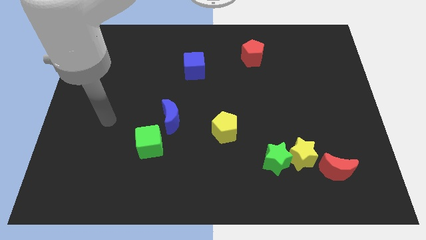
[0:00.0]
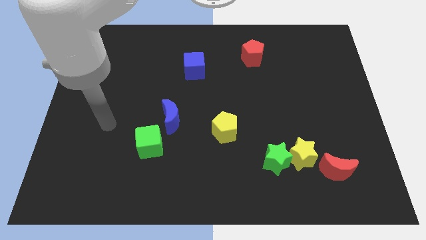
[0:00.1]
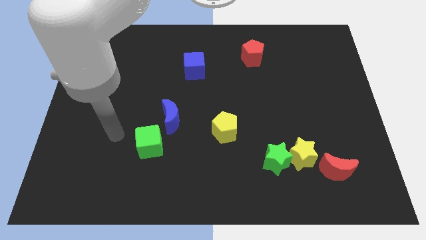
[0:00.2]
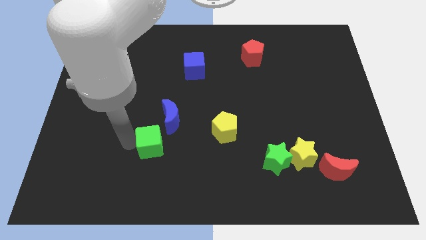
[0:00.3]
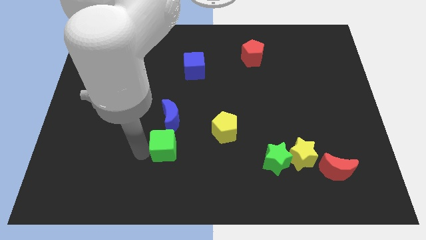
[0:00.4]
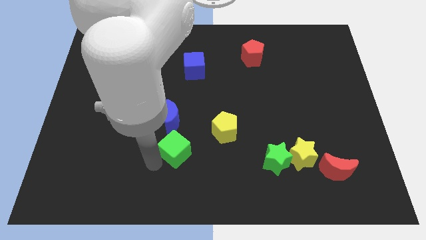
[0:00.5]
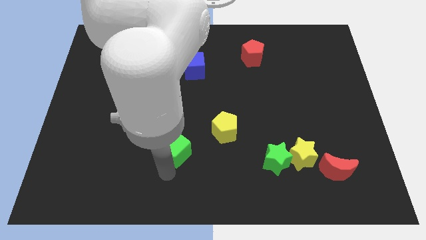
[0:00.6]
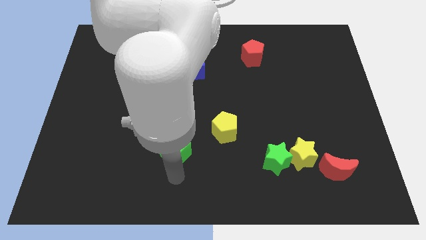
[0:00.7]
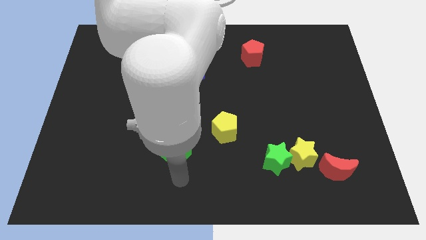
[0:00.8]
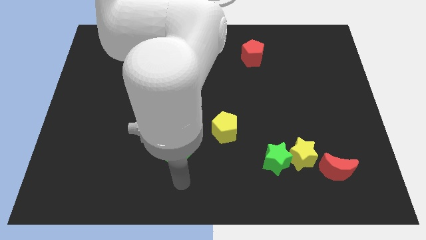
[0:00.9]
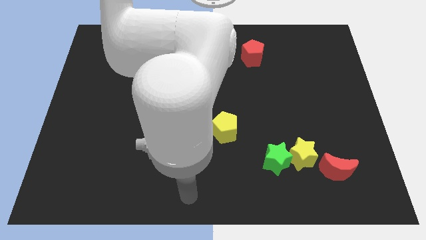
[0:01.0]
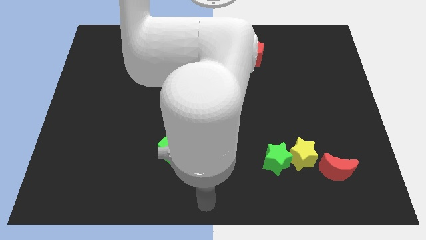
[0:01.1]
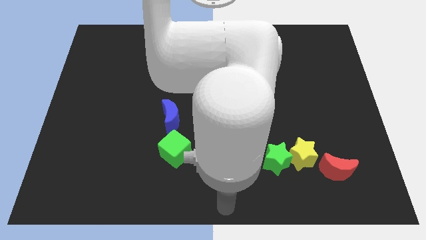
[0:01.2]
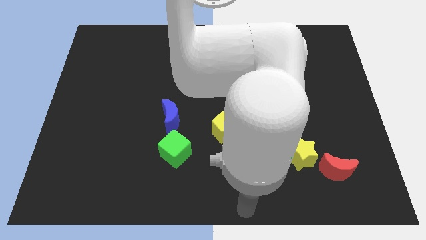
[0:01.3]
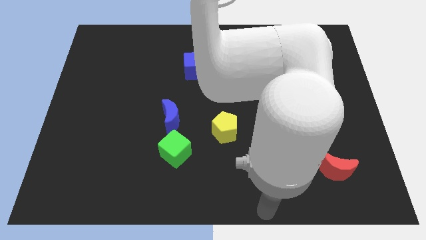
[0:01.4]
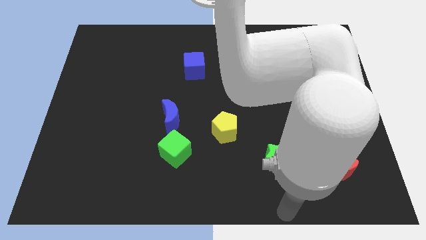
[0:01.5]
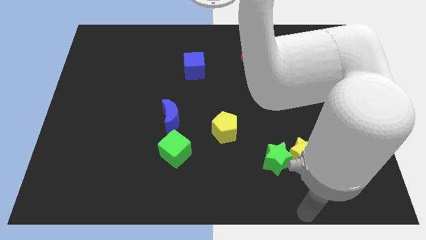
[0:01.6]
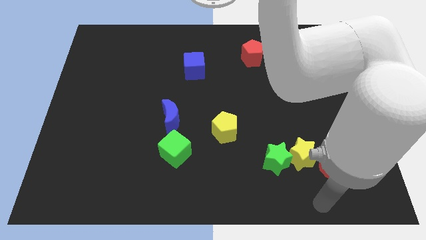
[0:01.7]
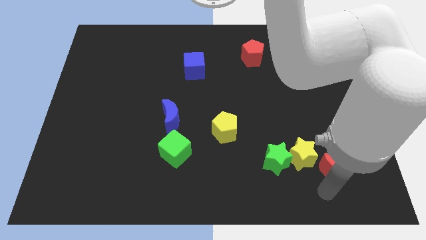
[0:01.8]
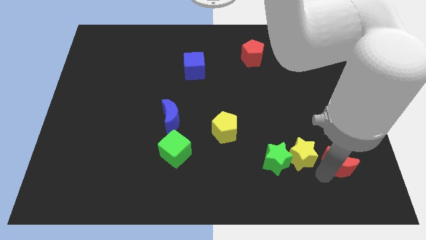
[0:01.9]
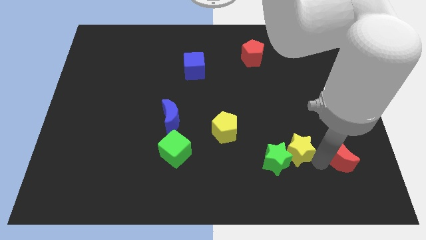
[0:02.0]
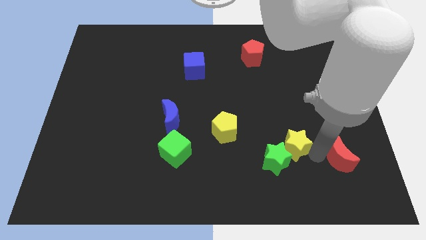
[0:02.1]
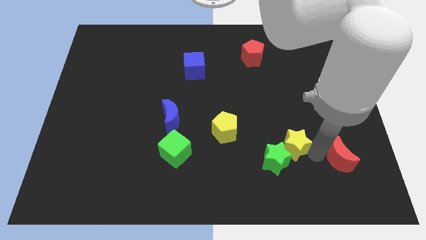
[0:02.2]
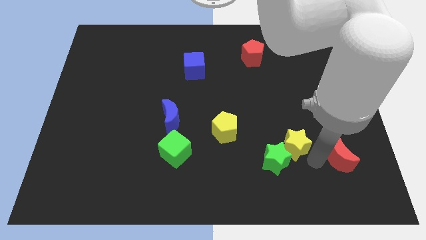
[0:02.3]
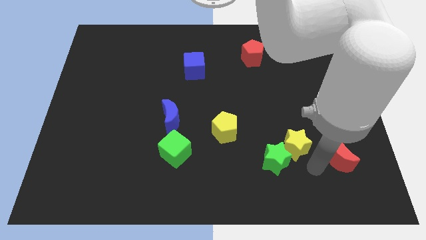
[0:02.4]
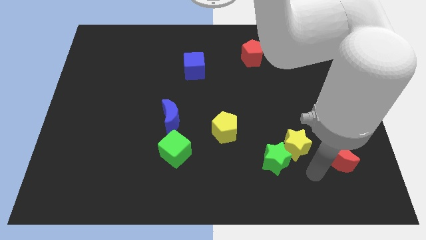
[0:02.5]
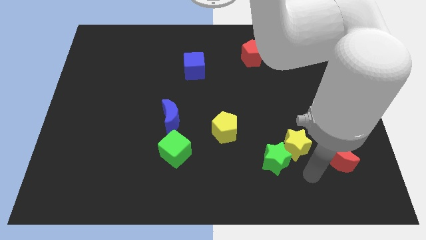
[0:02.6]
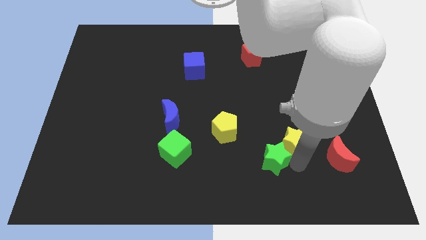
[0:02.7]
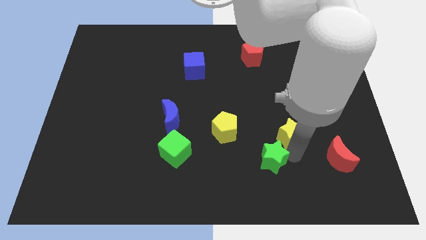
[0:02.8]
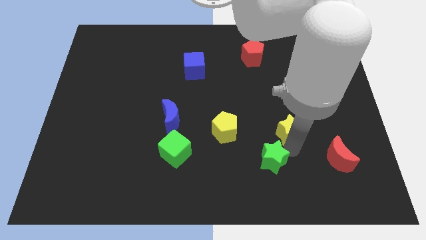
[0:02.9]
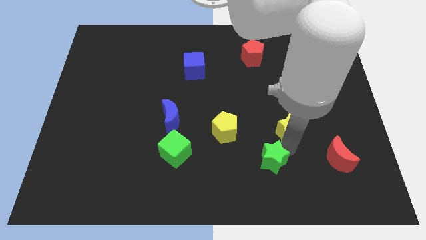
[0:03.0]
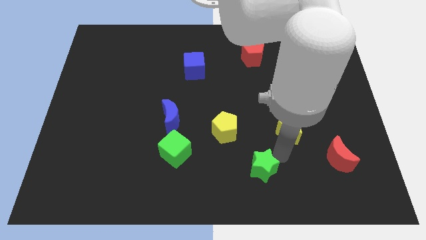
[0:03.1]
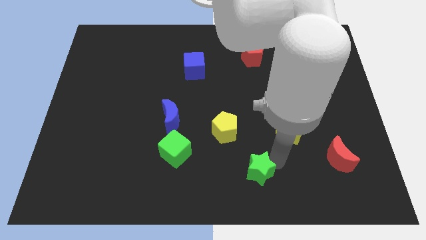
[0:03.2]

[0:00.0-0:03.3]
separate the green star and yellow star

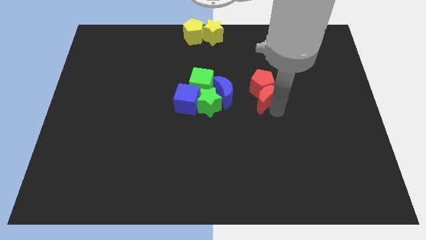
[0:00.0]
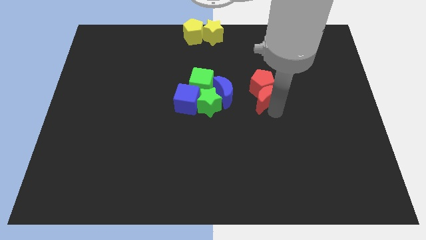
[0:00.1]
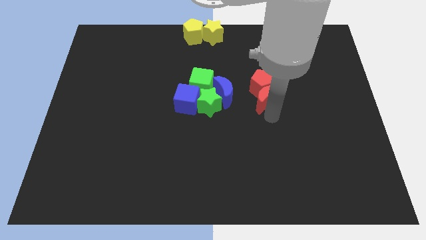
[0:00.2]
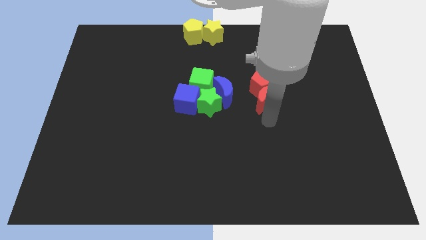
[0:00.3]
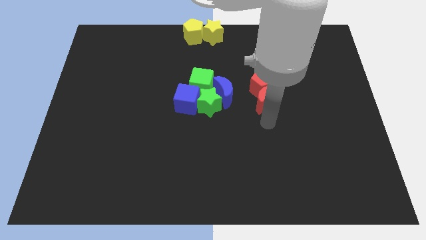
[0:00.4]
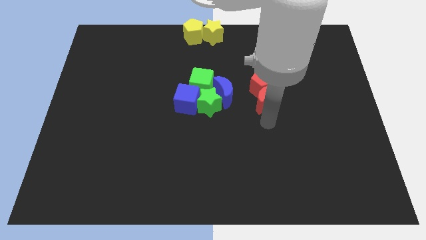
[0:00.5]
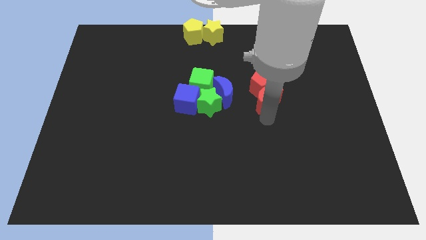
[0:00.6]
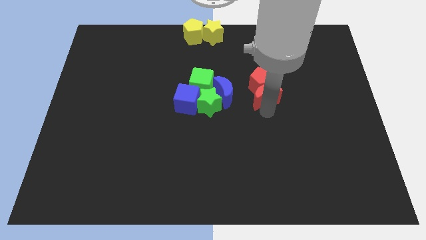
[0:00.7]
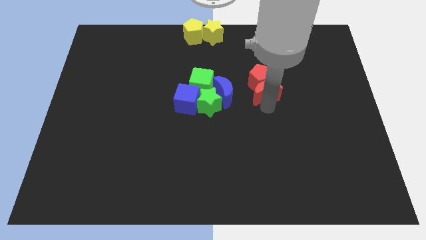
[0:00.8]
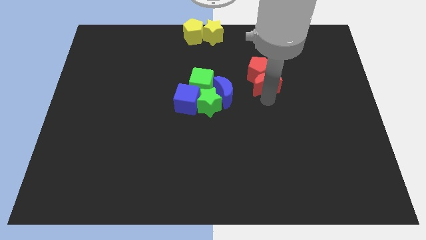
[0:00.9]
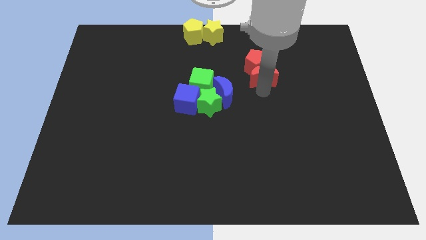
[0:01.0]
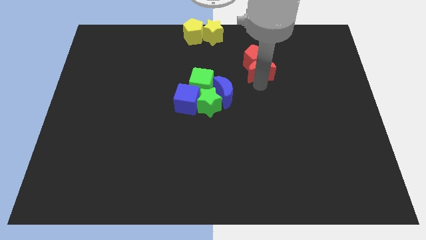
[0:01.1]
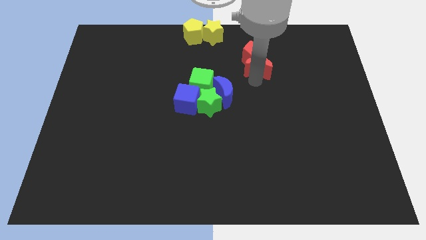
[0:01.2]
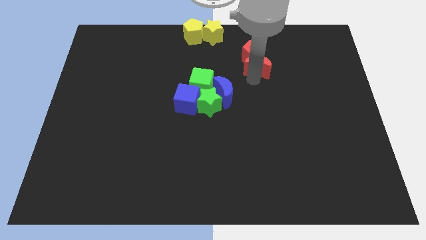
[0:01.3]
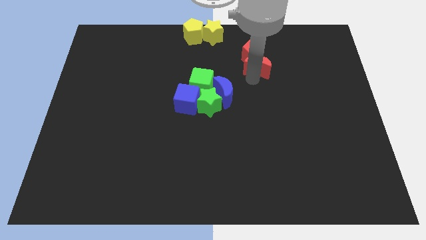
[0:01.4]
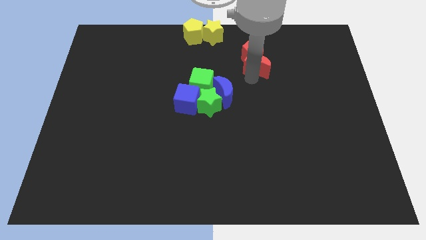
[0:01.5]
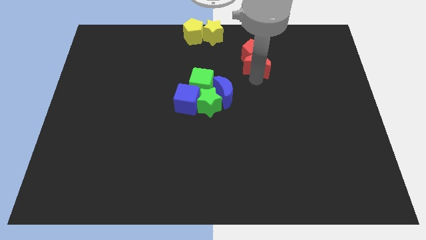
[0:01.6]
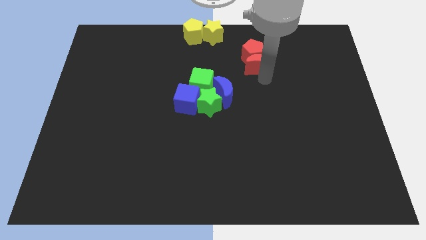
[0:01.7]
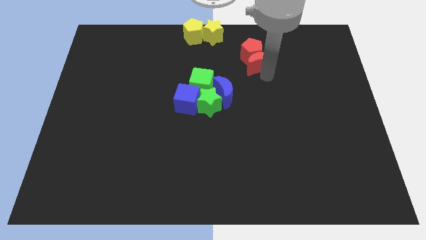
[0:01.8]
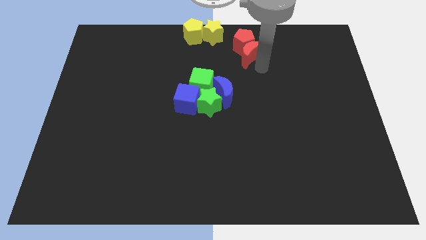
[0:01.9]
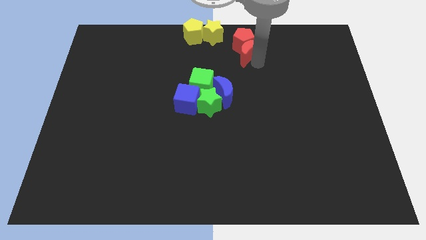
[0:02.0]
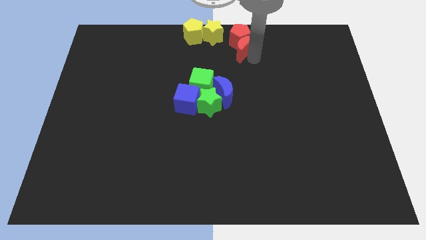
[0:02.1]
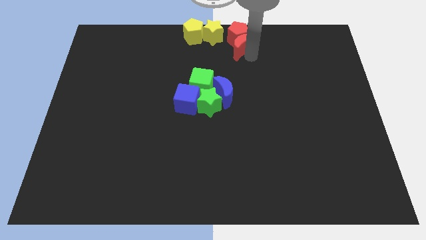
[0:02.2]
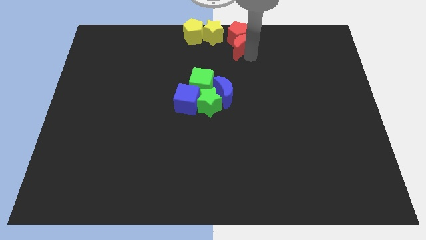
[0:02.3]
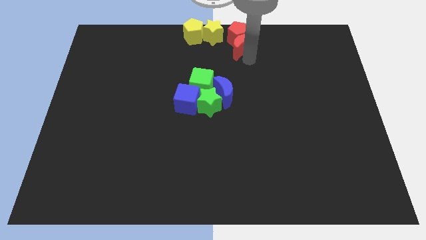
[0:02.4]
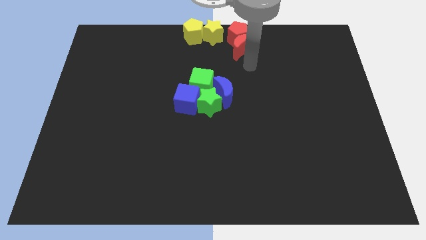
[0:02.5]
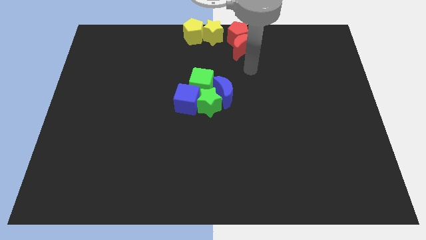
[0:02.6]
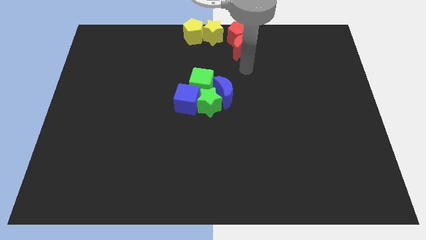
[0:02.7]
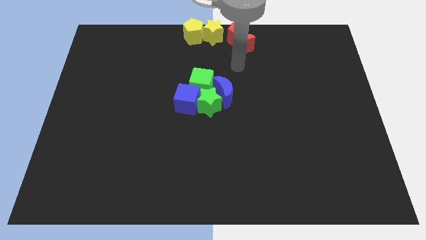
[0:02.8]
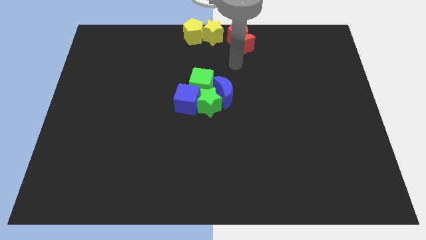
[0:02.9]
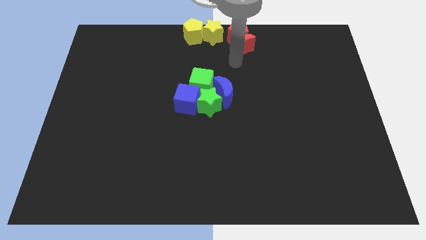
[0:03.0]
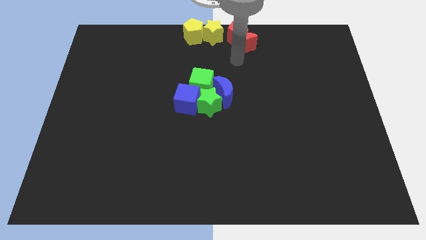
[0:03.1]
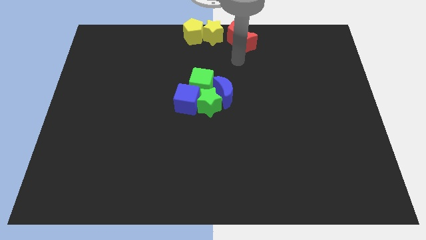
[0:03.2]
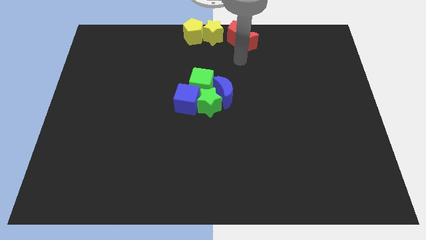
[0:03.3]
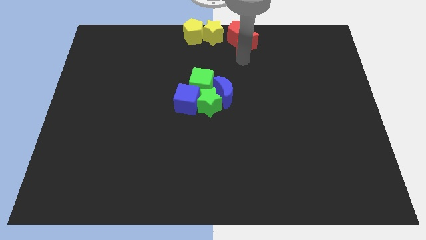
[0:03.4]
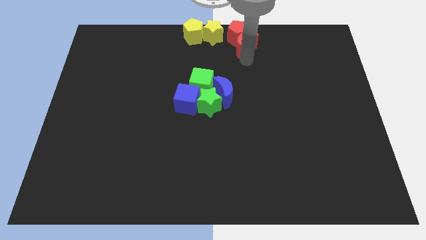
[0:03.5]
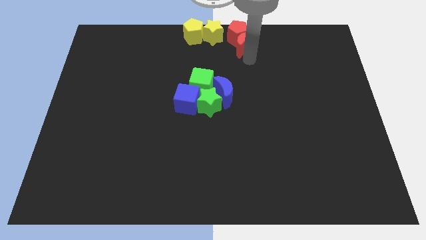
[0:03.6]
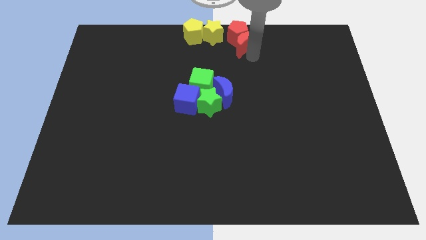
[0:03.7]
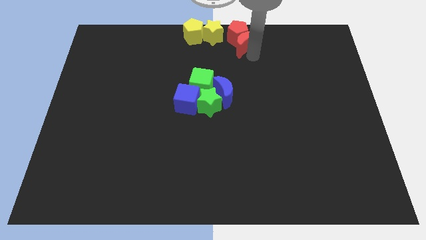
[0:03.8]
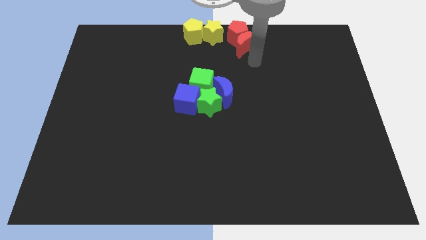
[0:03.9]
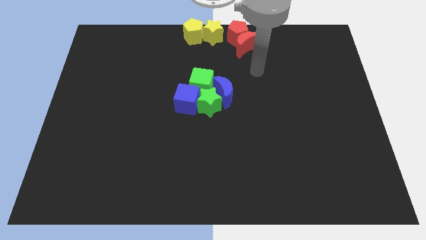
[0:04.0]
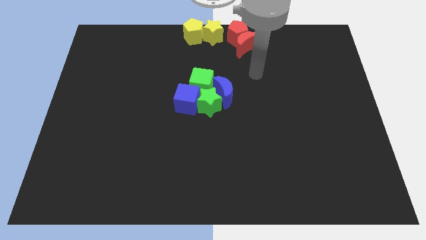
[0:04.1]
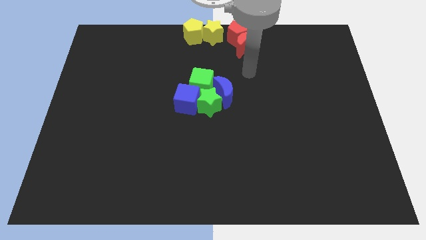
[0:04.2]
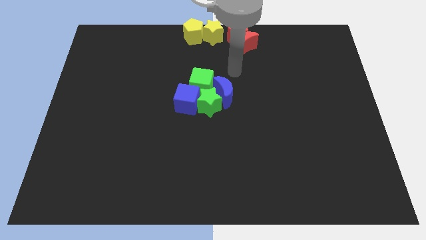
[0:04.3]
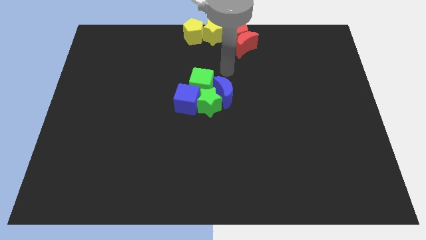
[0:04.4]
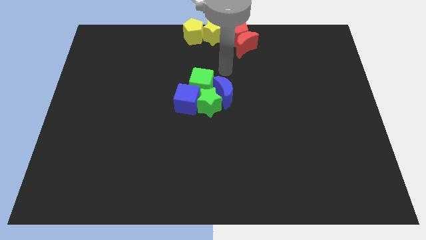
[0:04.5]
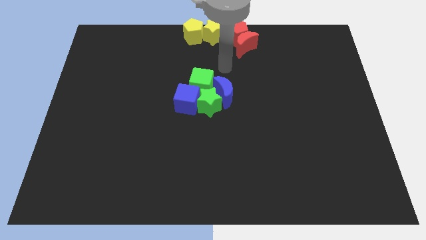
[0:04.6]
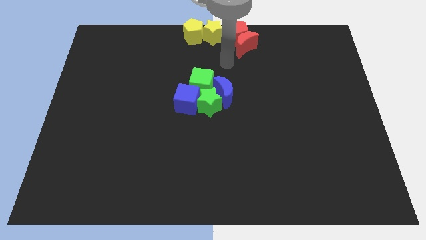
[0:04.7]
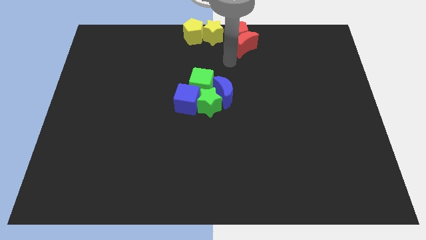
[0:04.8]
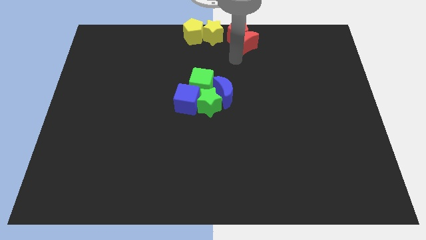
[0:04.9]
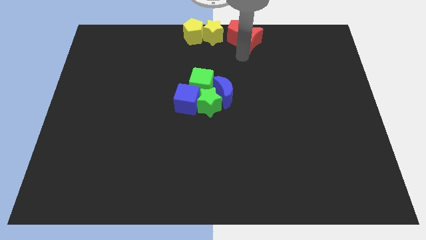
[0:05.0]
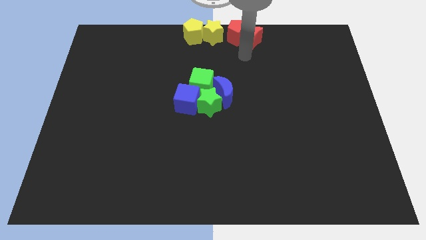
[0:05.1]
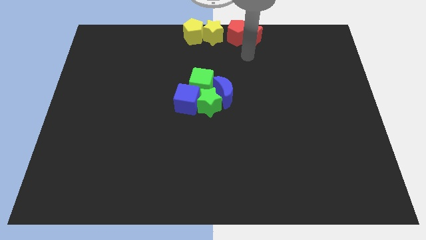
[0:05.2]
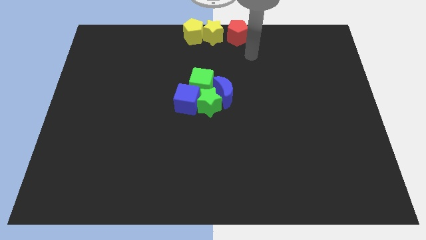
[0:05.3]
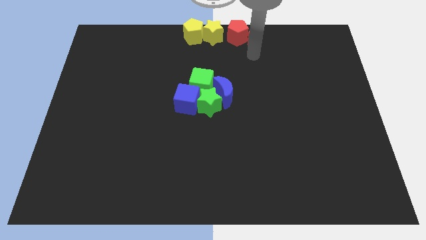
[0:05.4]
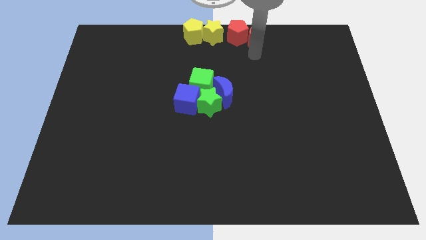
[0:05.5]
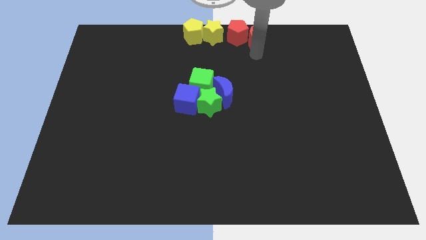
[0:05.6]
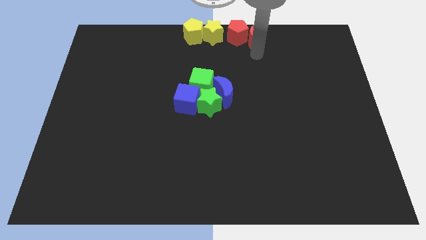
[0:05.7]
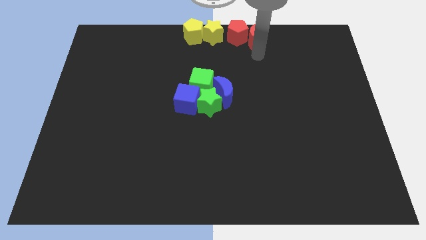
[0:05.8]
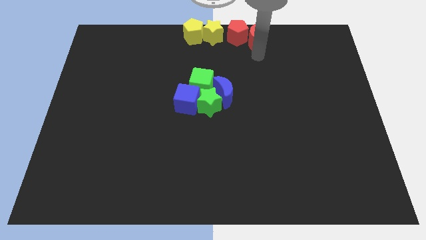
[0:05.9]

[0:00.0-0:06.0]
move red moon to form a horizantal line with other blocks
